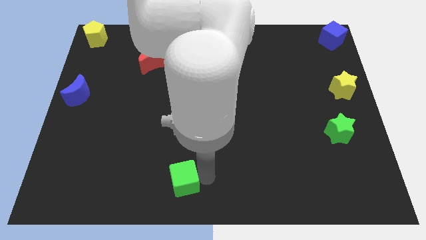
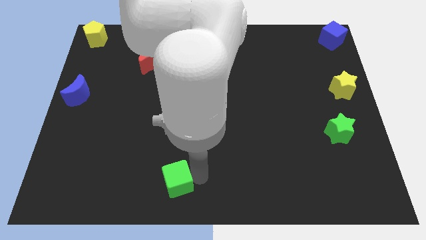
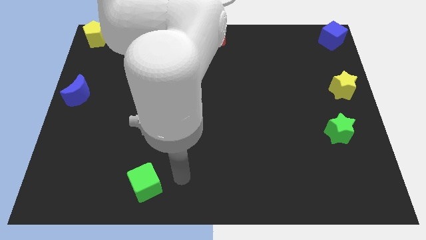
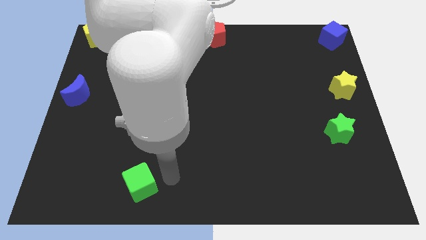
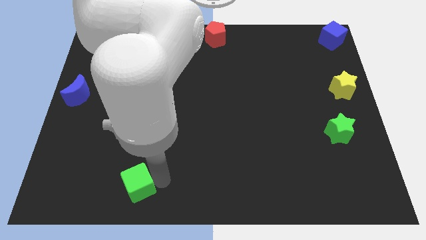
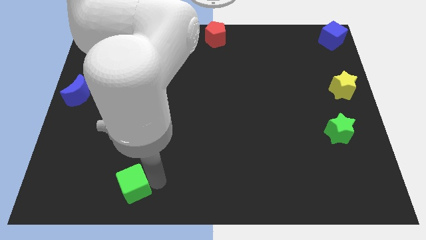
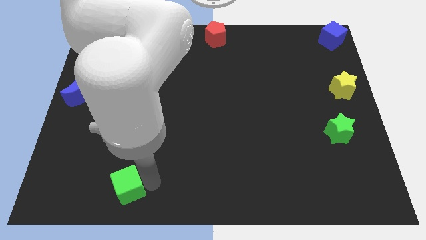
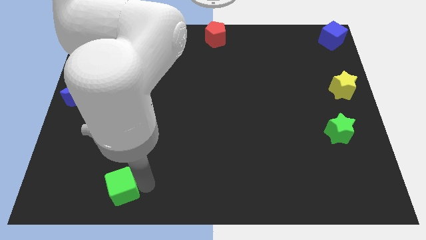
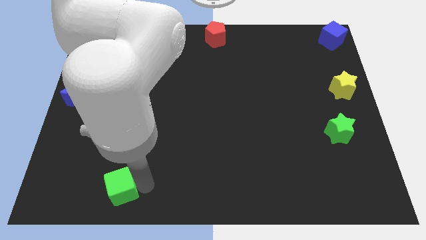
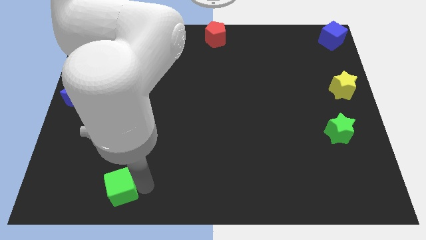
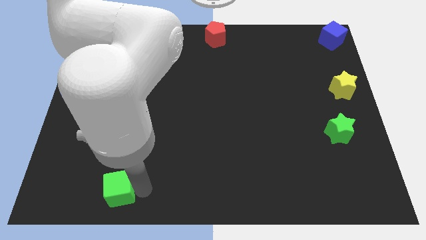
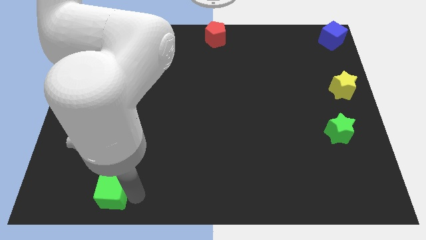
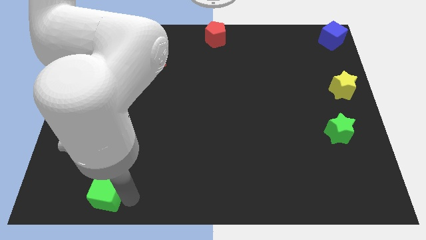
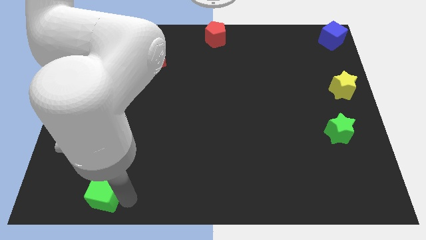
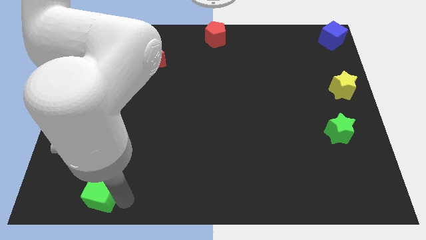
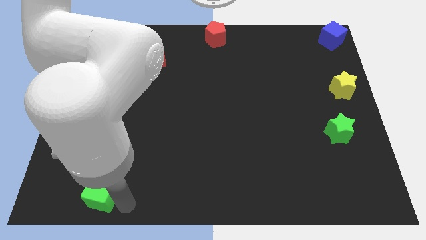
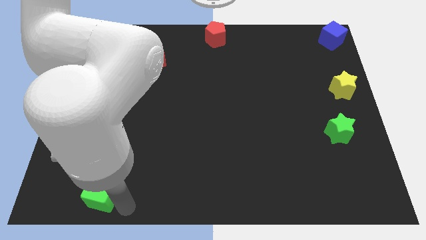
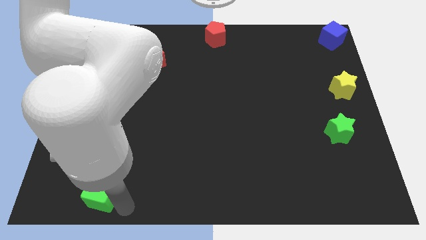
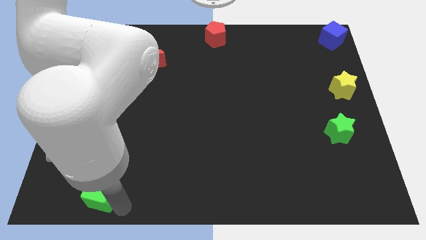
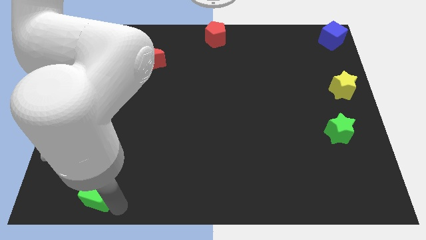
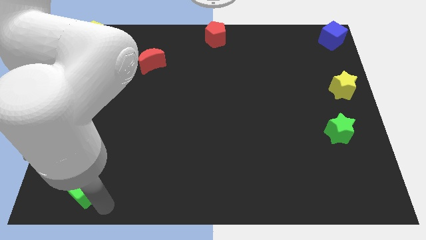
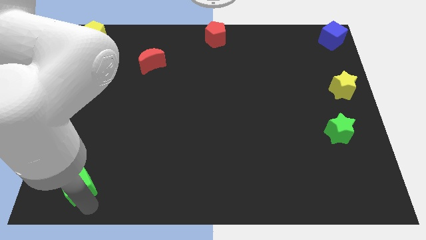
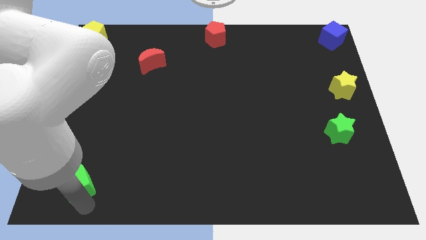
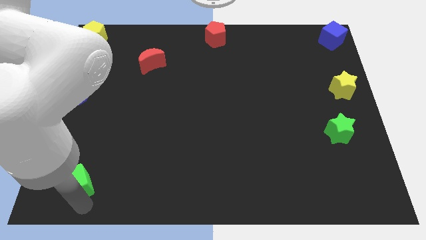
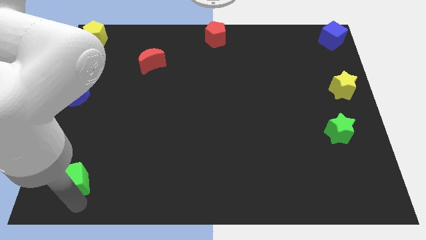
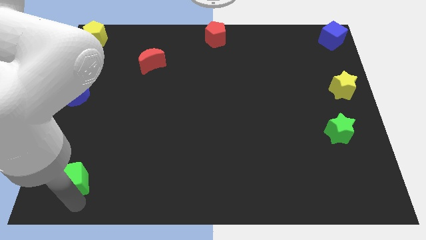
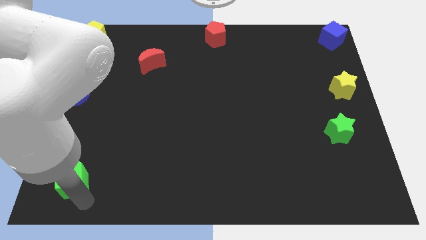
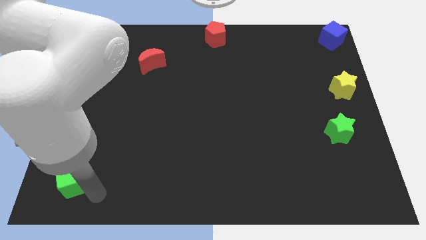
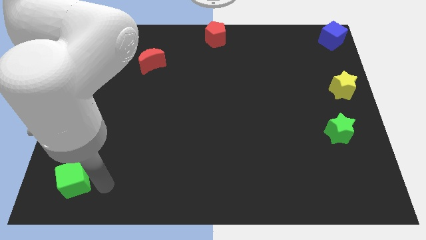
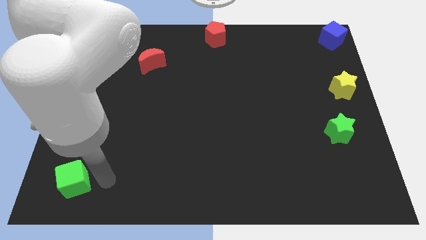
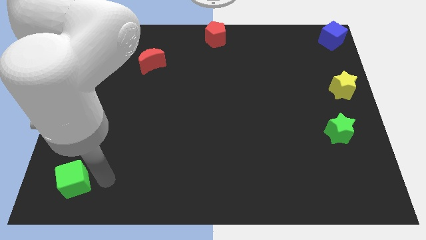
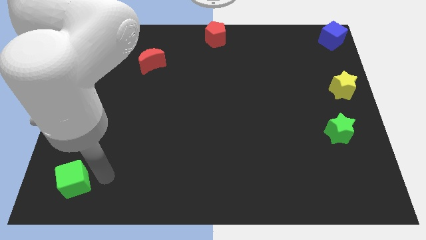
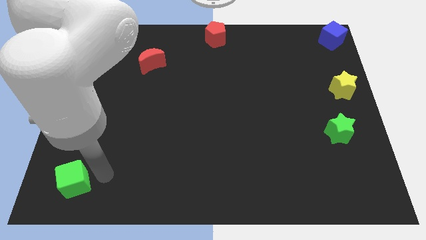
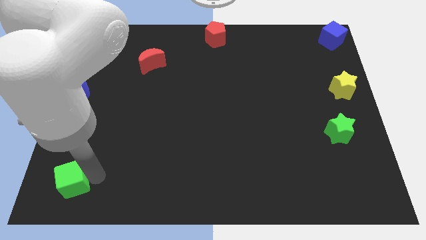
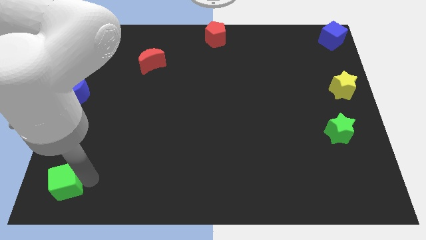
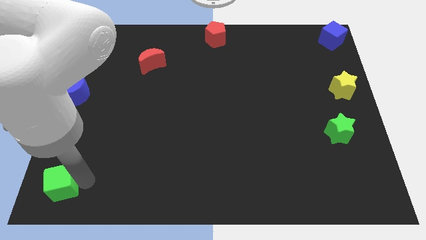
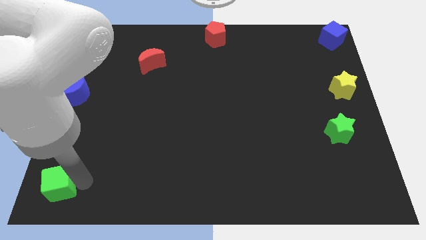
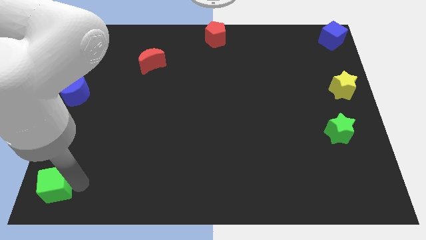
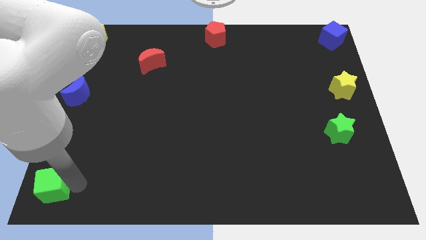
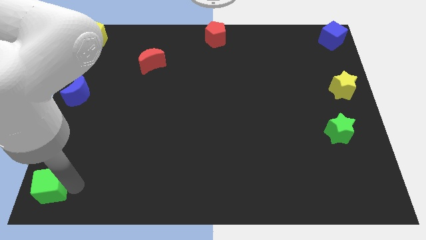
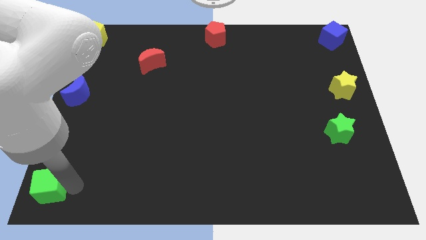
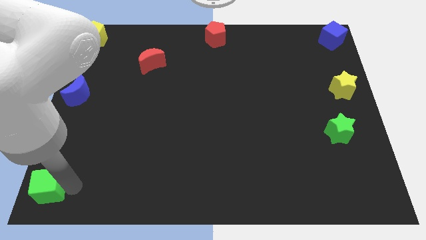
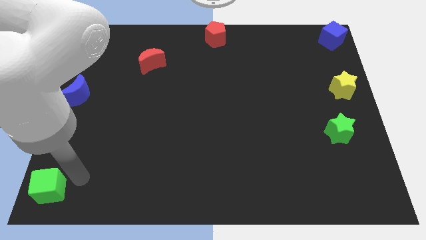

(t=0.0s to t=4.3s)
slide the green cube to the bottom left side

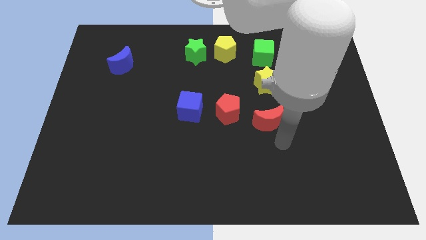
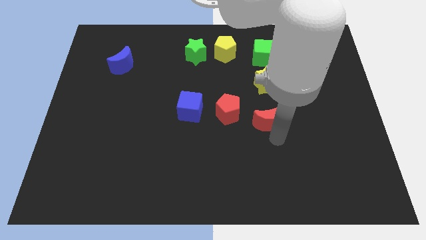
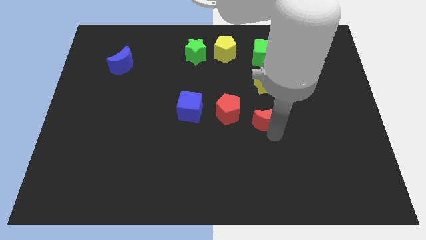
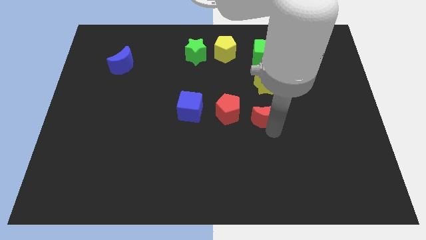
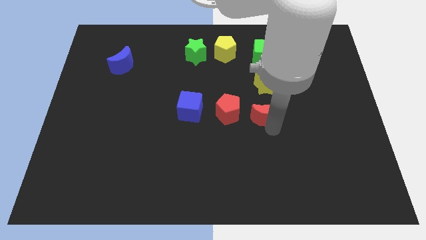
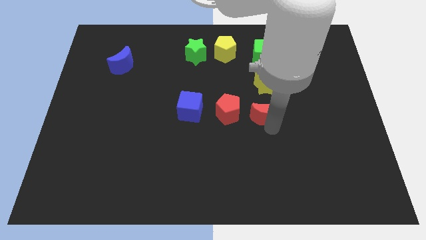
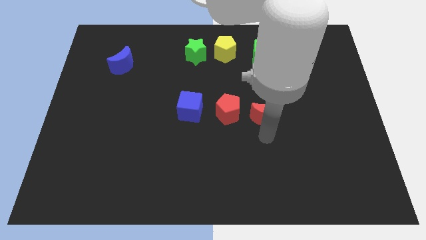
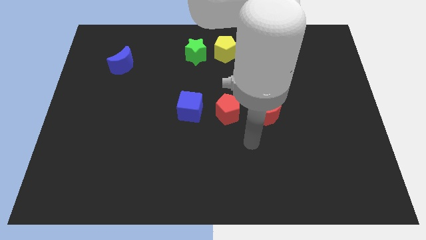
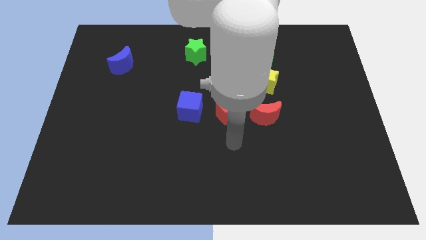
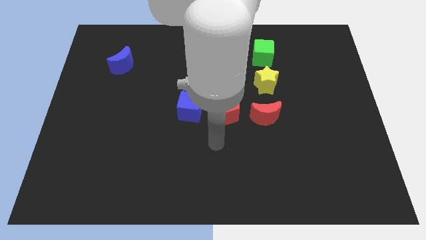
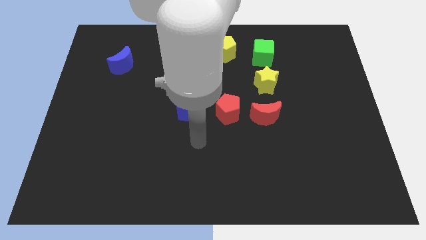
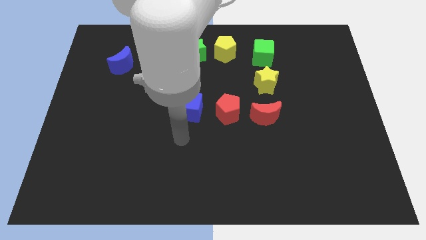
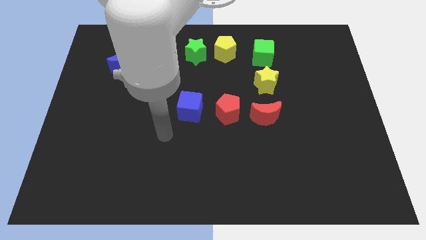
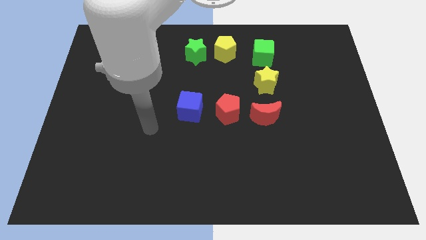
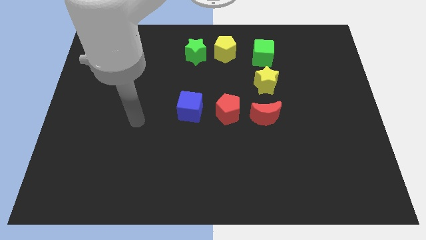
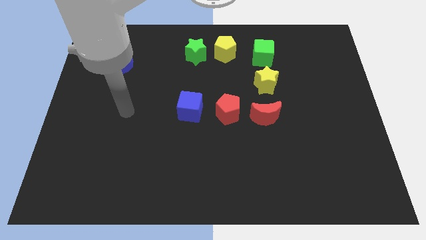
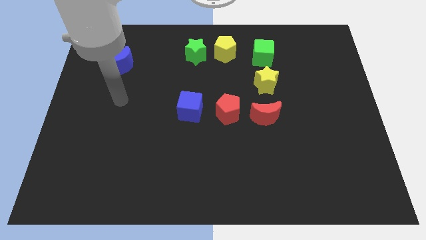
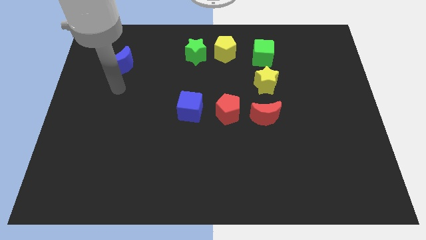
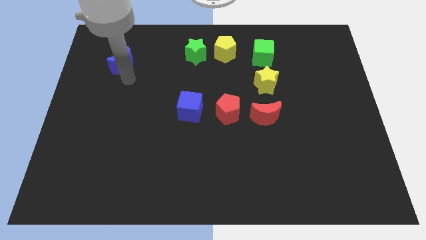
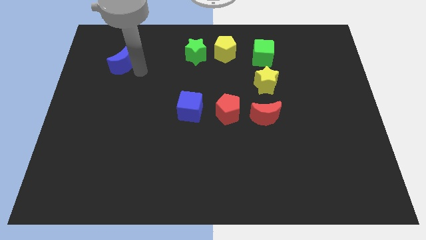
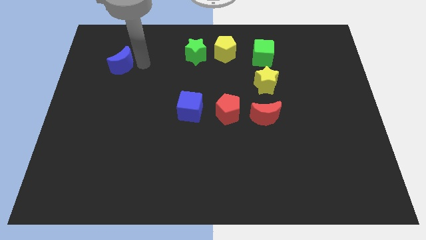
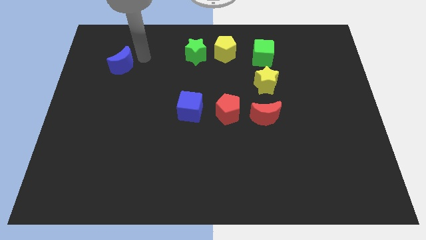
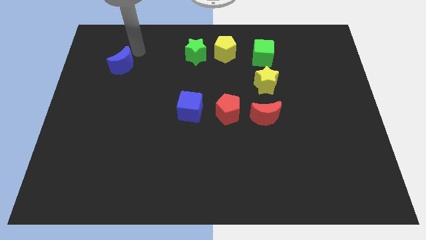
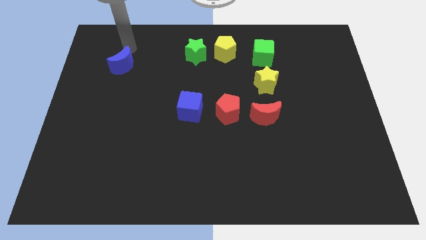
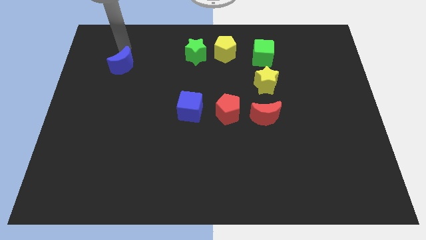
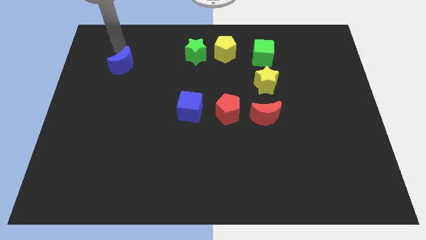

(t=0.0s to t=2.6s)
slightly move the red crescent to the top

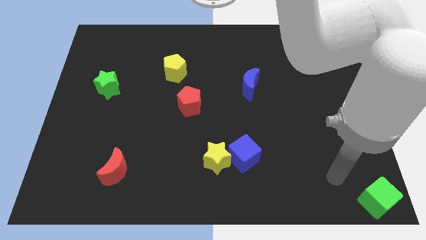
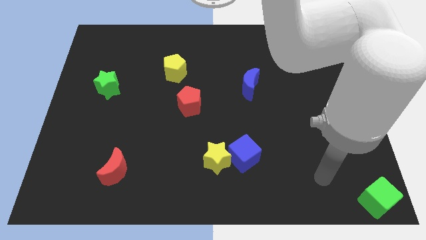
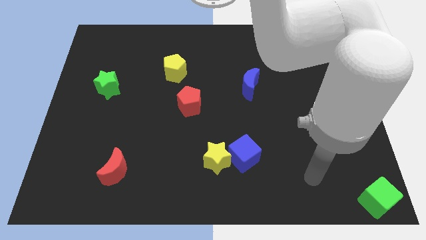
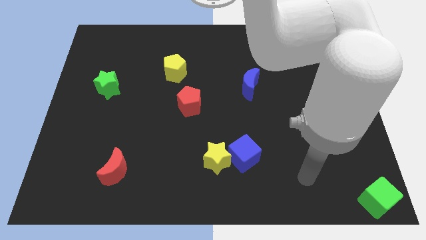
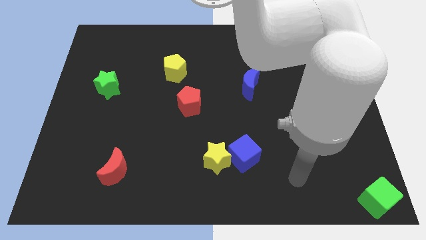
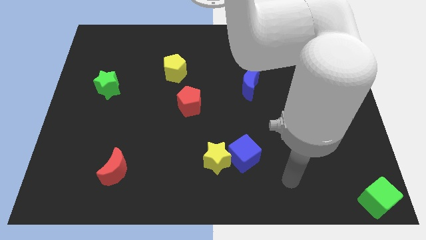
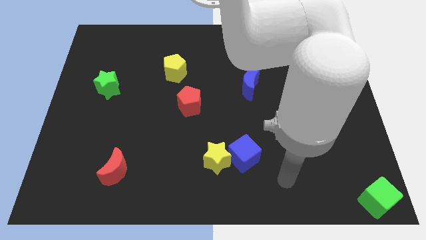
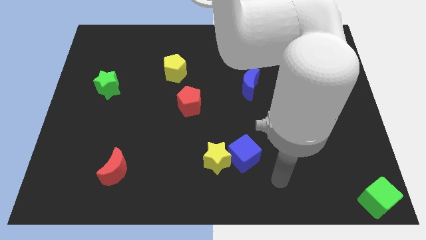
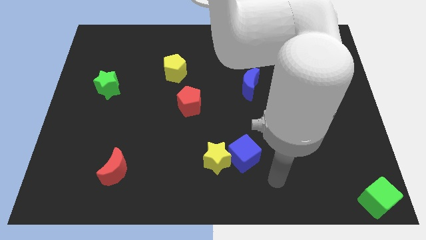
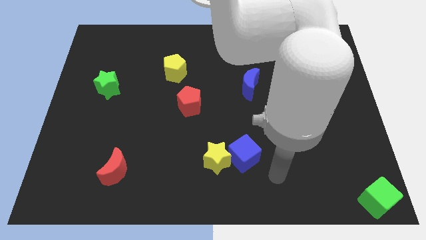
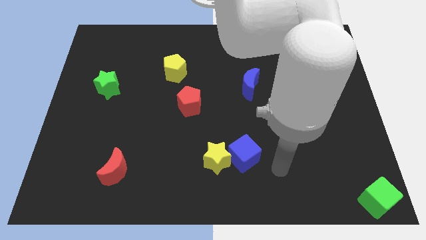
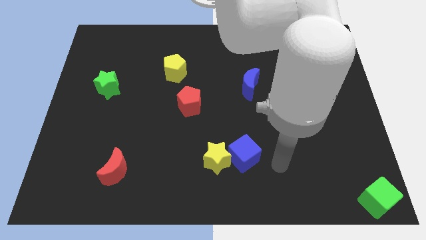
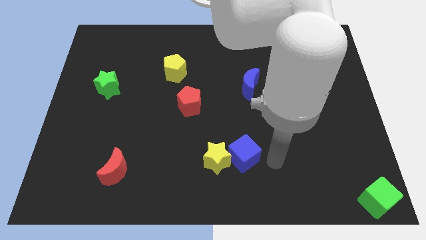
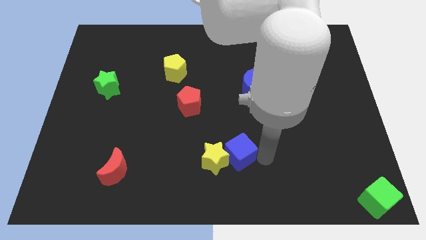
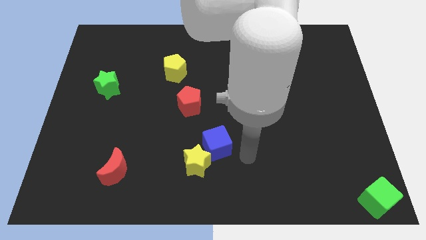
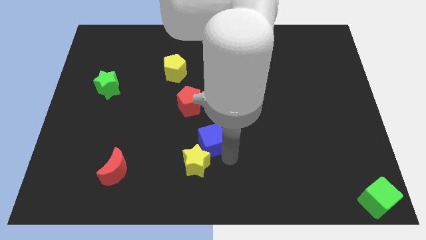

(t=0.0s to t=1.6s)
move the blue cube slightly towards the yellow star

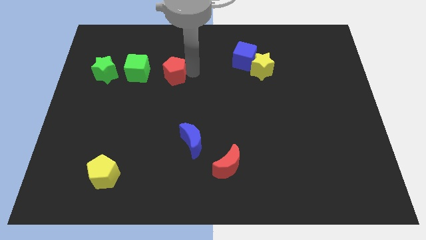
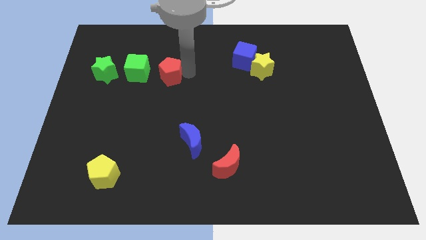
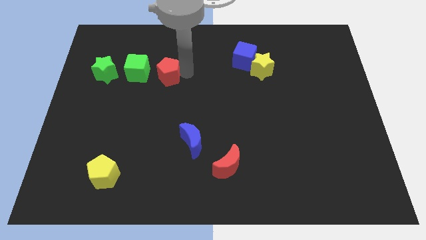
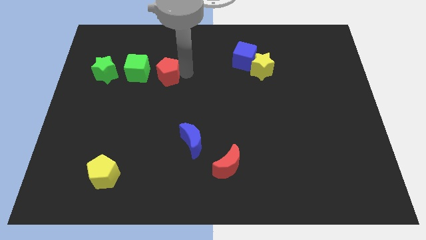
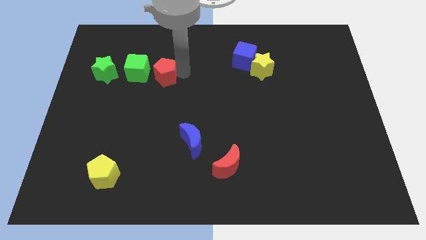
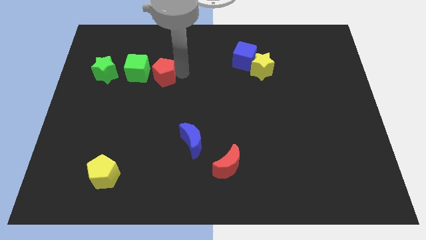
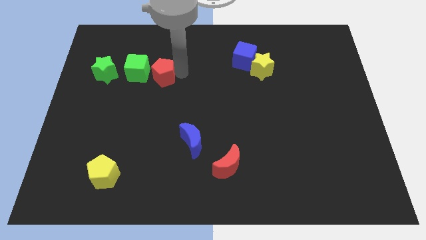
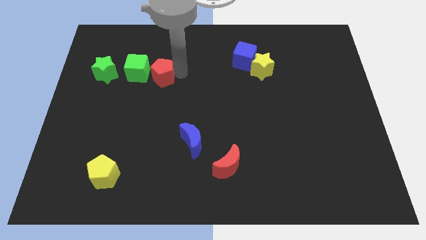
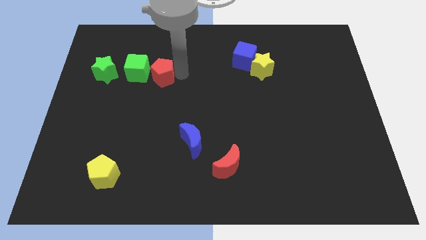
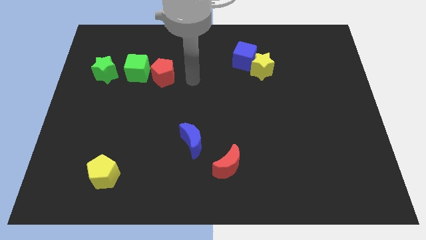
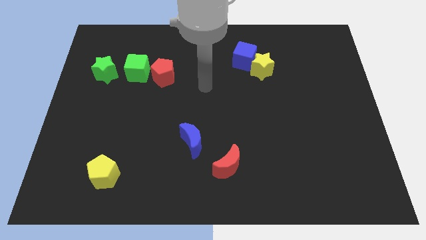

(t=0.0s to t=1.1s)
move the red pentagon to the right side of the green cube
